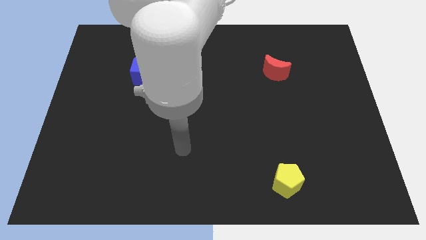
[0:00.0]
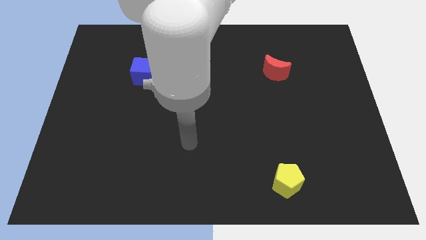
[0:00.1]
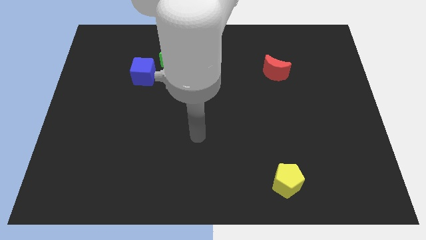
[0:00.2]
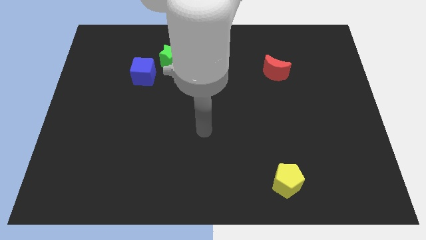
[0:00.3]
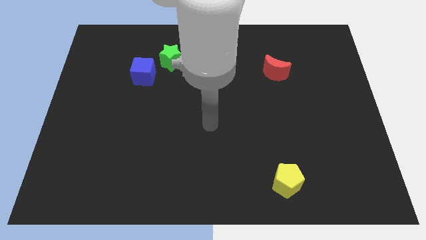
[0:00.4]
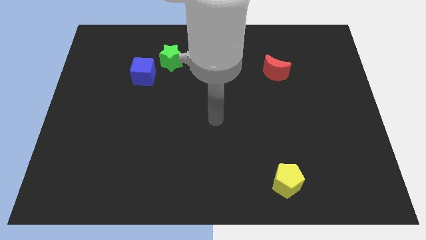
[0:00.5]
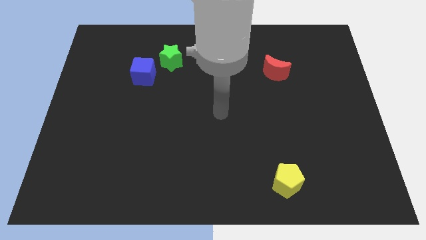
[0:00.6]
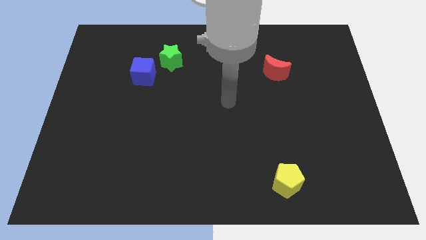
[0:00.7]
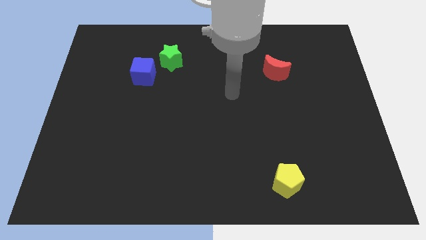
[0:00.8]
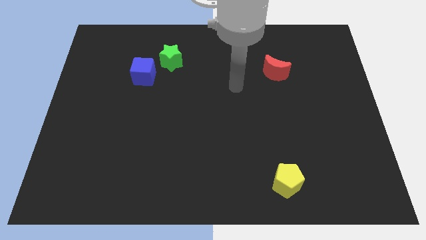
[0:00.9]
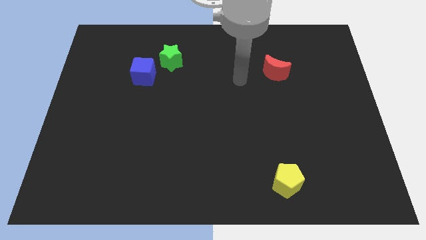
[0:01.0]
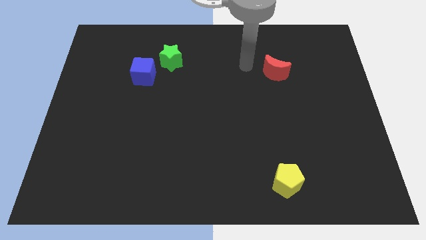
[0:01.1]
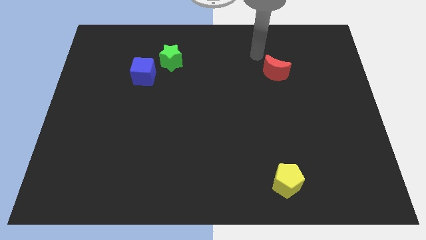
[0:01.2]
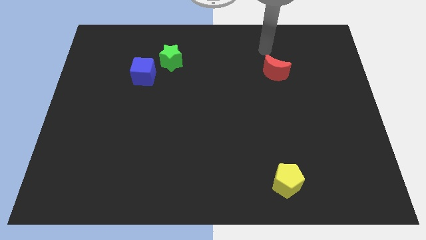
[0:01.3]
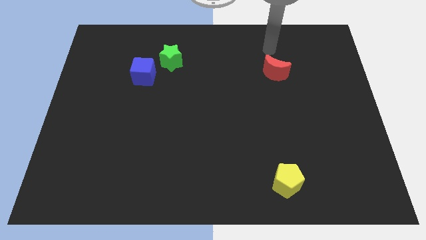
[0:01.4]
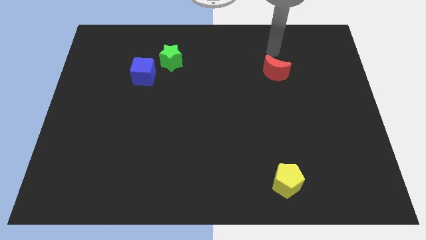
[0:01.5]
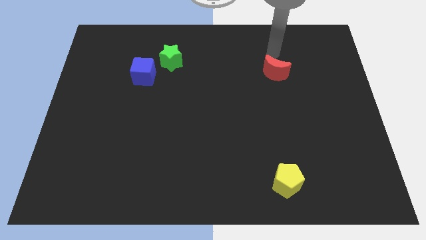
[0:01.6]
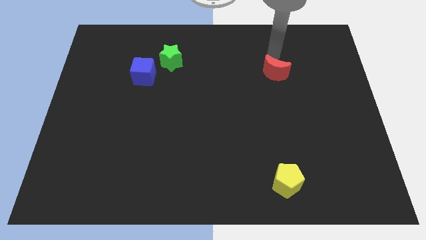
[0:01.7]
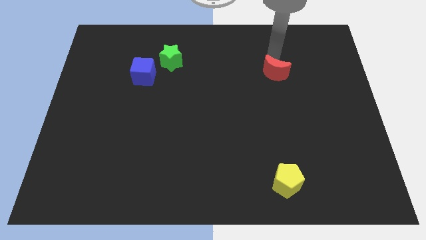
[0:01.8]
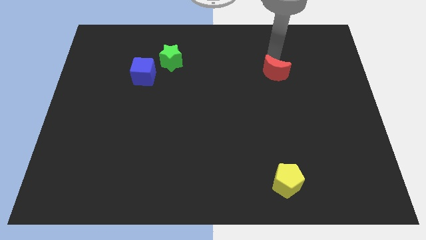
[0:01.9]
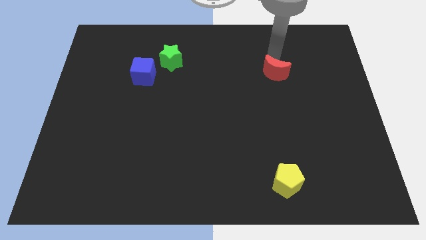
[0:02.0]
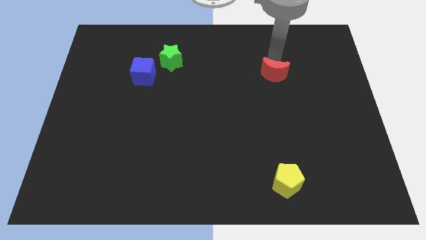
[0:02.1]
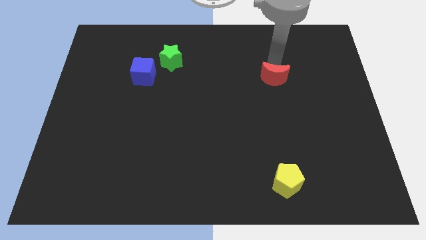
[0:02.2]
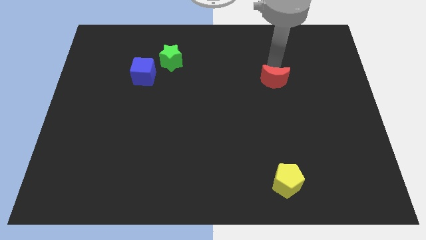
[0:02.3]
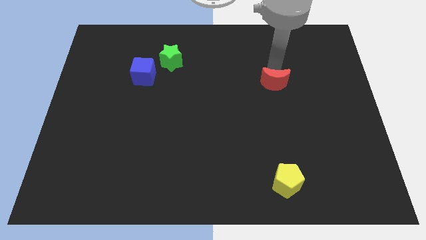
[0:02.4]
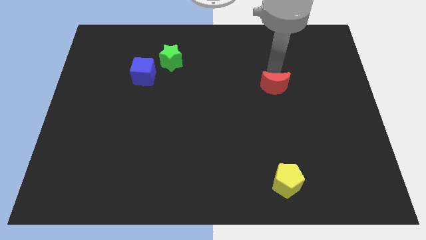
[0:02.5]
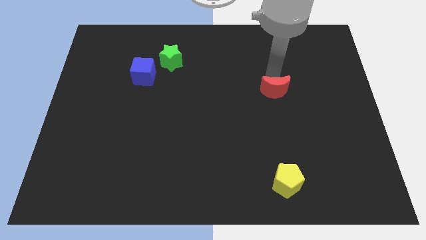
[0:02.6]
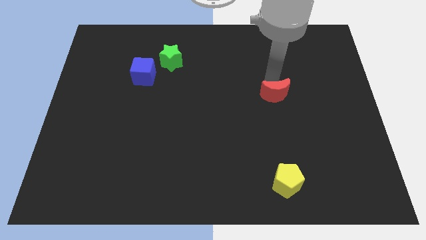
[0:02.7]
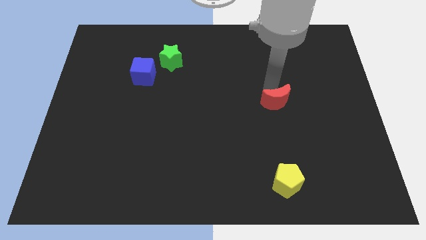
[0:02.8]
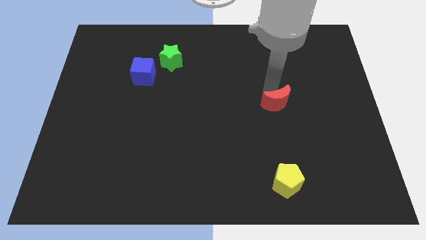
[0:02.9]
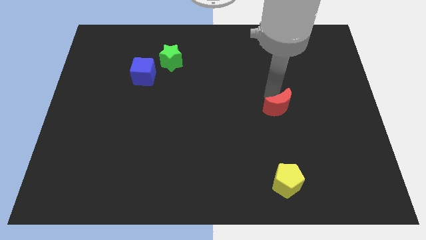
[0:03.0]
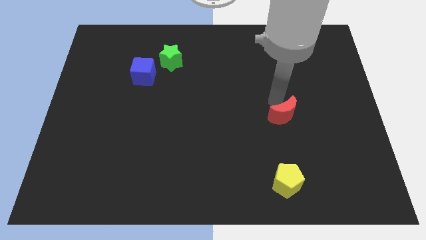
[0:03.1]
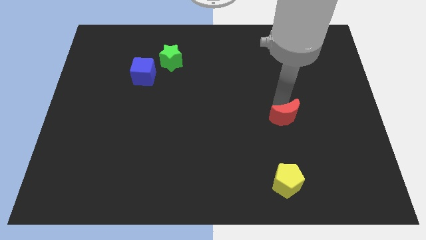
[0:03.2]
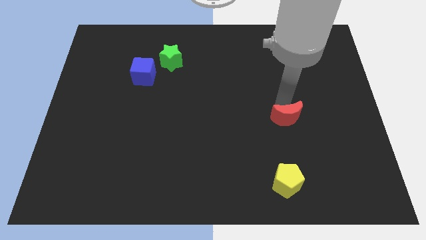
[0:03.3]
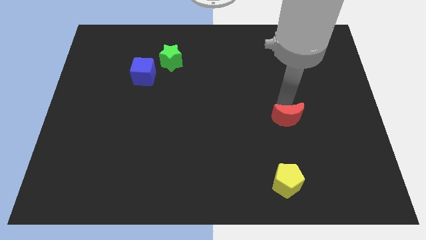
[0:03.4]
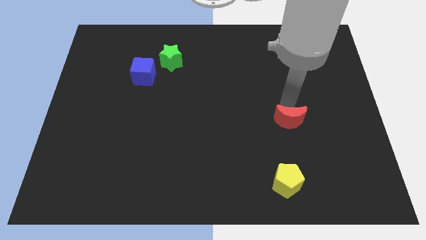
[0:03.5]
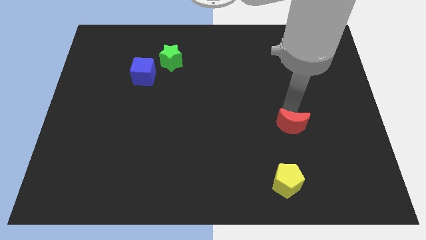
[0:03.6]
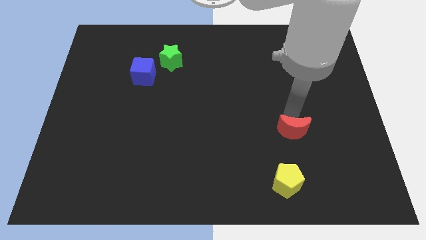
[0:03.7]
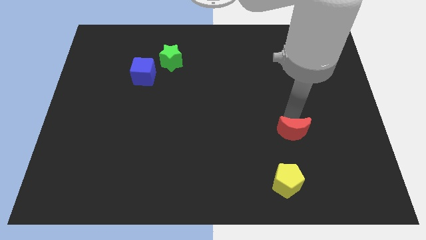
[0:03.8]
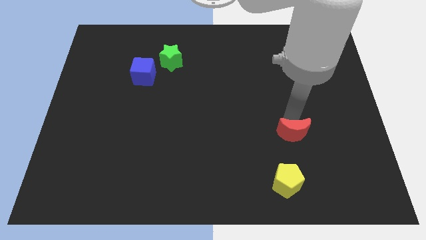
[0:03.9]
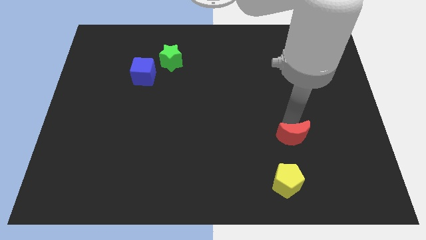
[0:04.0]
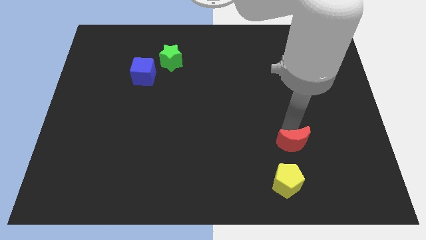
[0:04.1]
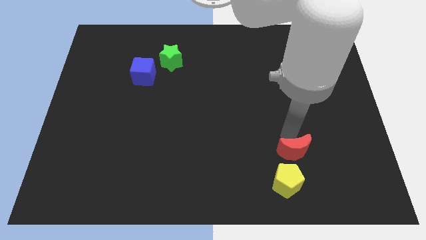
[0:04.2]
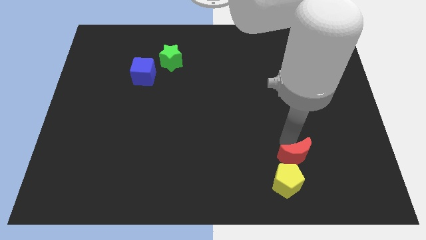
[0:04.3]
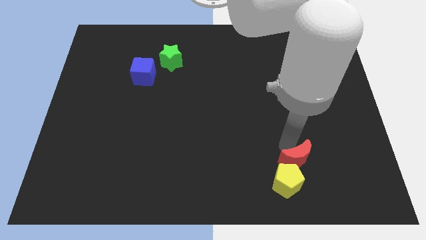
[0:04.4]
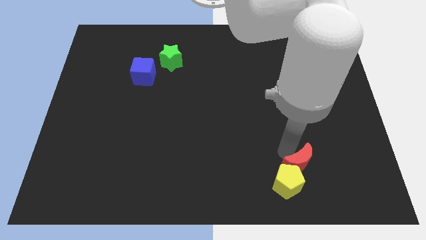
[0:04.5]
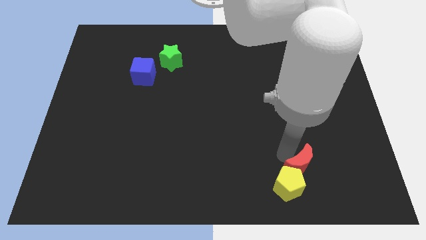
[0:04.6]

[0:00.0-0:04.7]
move the moon close to the yellow block

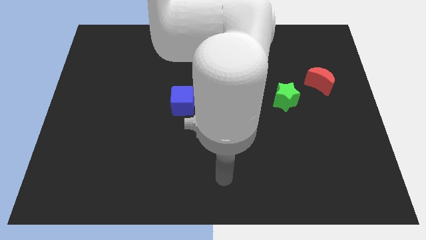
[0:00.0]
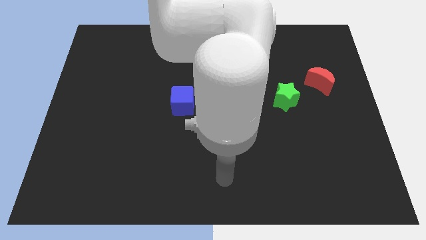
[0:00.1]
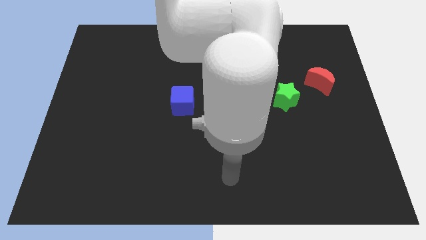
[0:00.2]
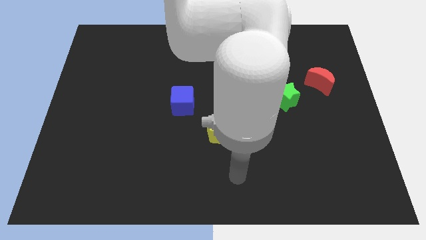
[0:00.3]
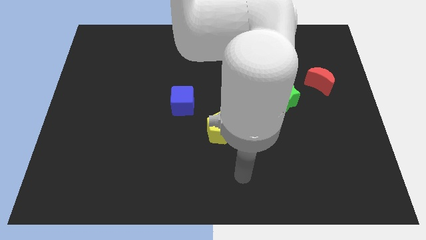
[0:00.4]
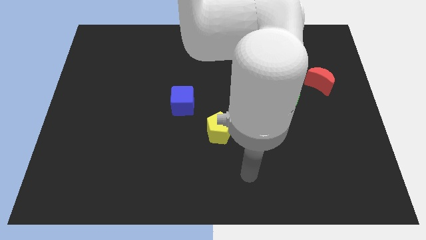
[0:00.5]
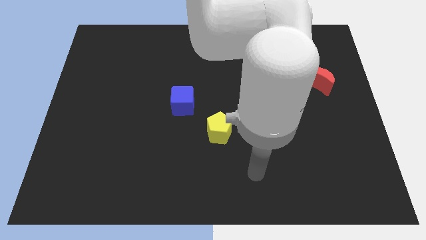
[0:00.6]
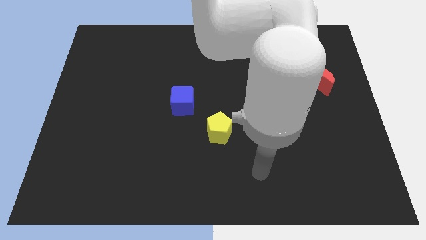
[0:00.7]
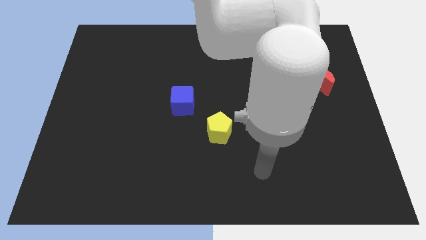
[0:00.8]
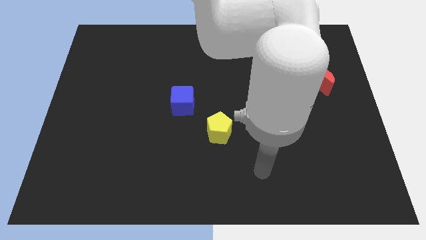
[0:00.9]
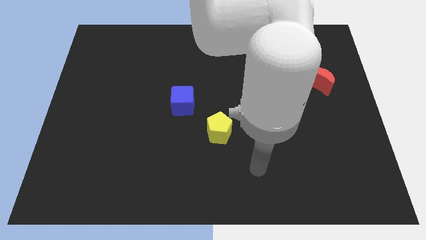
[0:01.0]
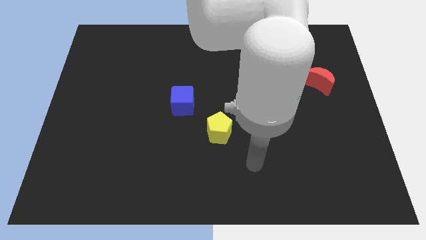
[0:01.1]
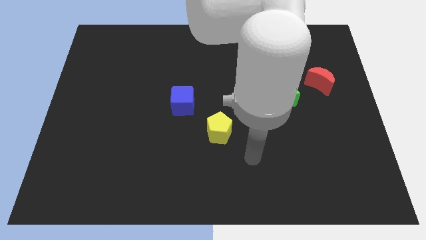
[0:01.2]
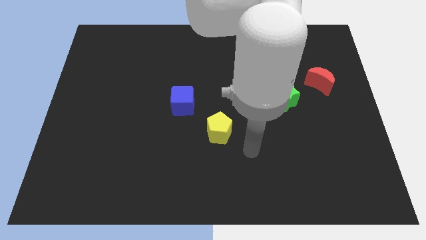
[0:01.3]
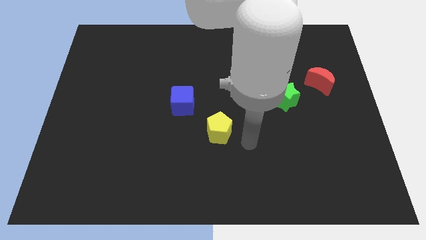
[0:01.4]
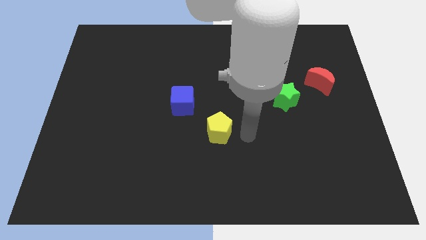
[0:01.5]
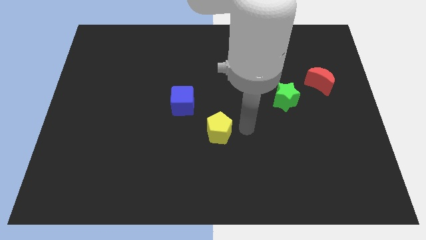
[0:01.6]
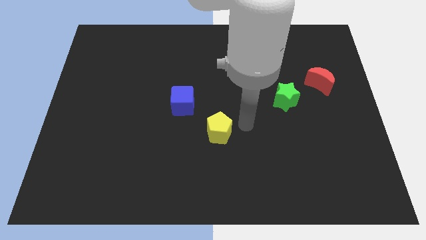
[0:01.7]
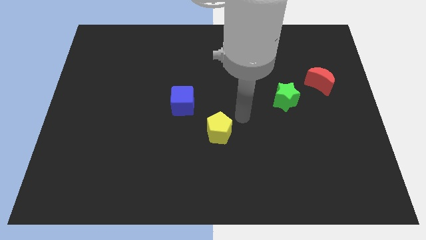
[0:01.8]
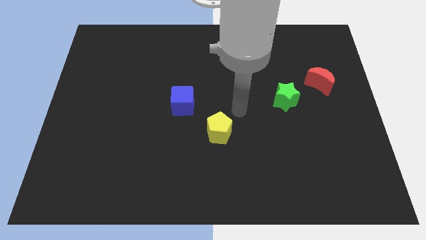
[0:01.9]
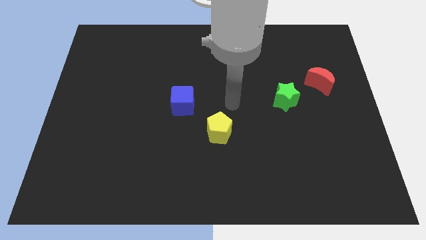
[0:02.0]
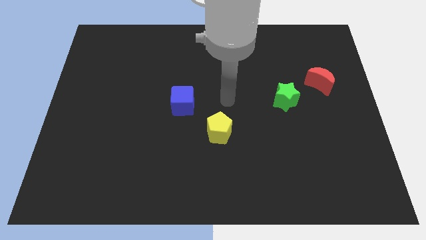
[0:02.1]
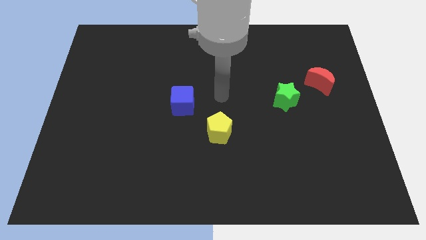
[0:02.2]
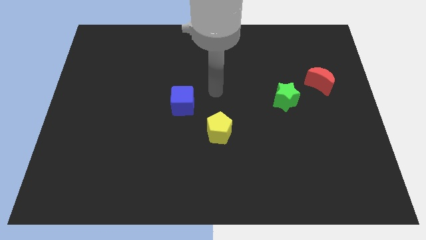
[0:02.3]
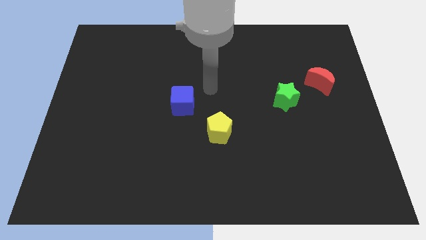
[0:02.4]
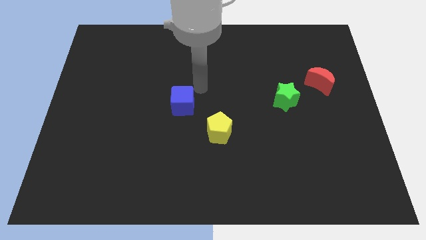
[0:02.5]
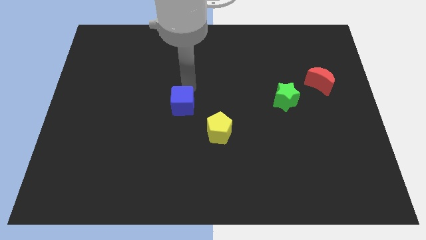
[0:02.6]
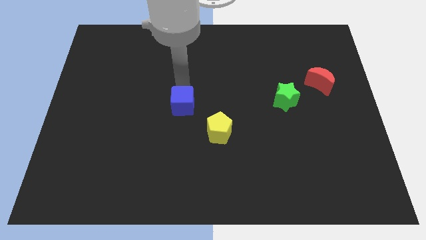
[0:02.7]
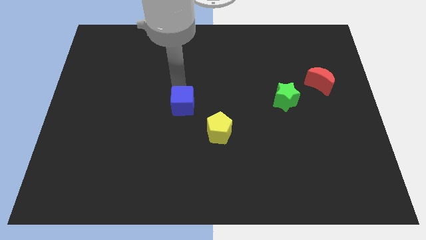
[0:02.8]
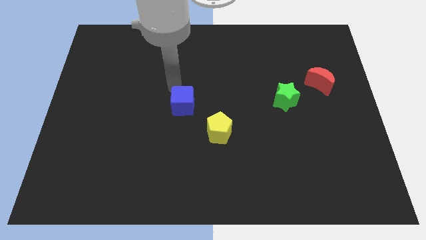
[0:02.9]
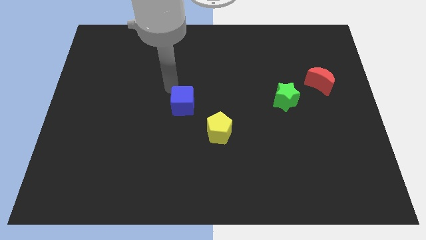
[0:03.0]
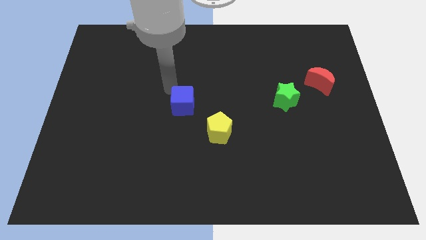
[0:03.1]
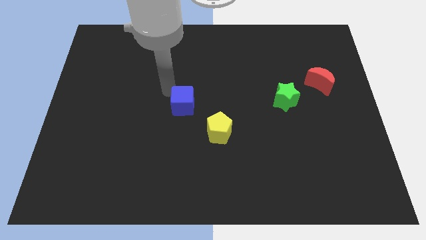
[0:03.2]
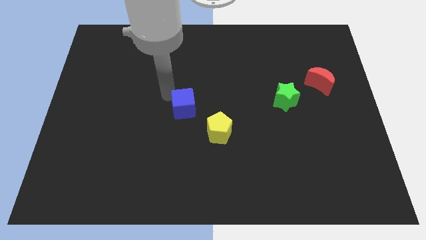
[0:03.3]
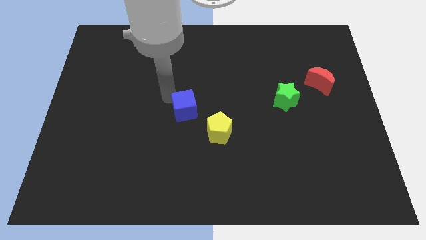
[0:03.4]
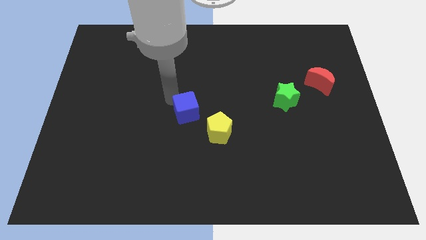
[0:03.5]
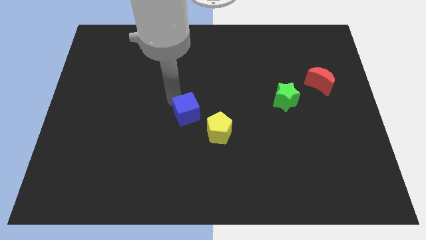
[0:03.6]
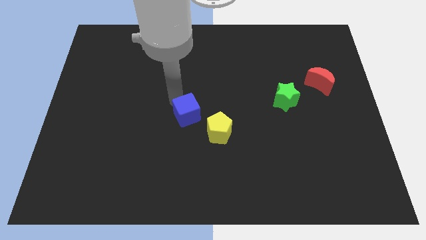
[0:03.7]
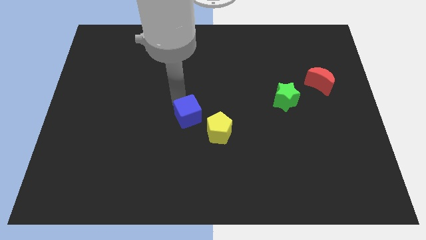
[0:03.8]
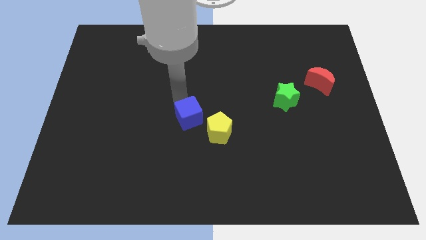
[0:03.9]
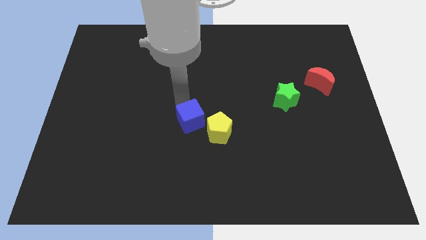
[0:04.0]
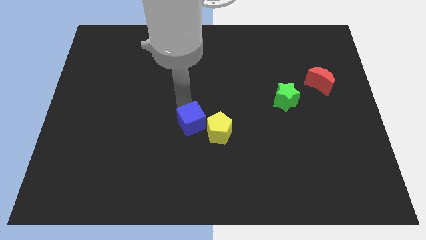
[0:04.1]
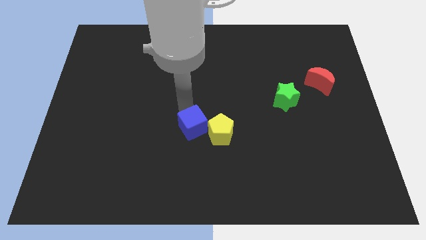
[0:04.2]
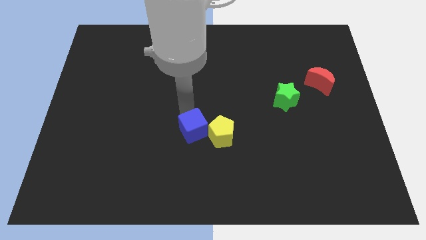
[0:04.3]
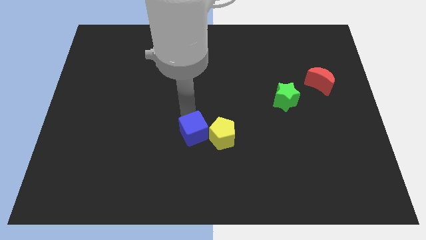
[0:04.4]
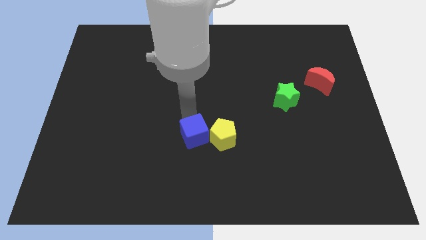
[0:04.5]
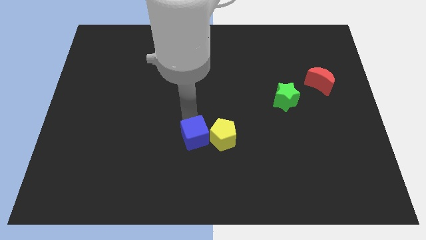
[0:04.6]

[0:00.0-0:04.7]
slide the cube to the yellow pentagon
